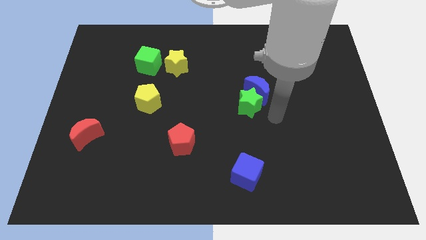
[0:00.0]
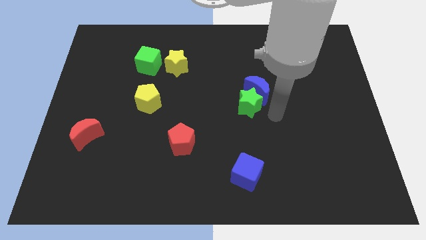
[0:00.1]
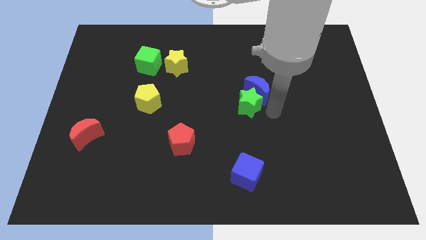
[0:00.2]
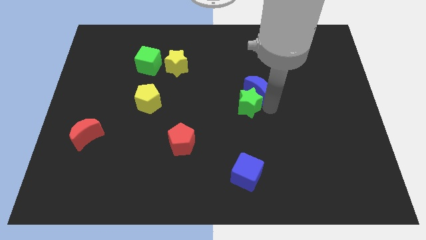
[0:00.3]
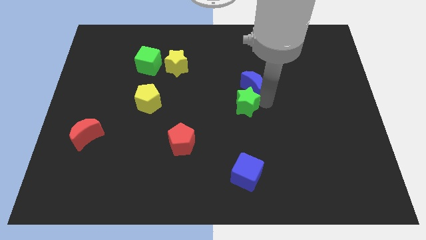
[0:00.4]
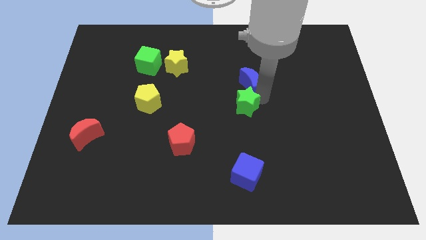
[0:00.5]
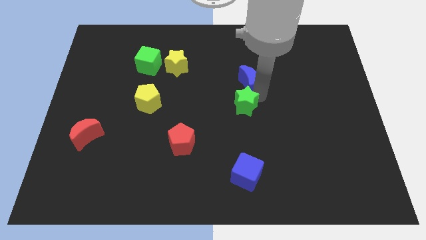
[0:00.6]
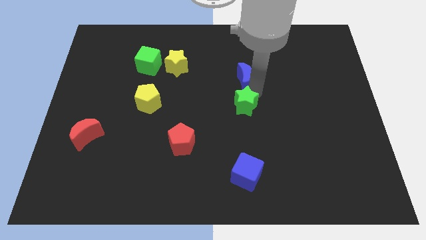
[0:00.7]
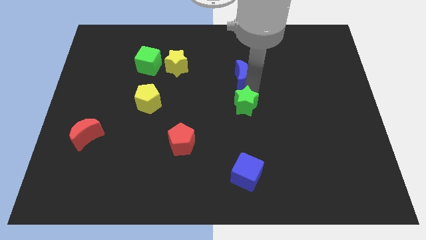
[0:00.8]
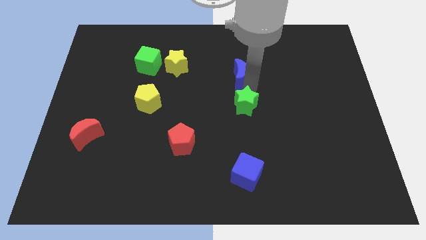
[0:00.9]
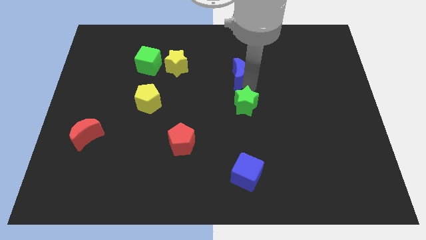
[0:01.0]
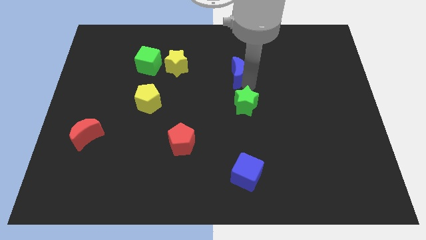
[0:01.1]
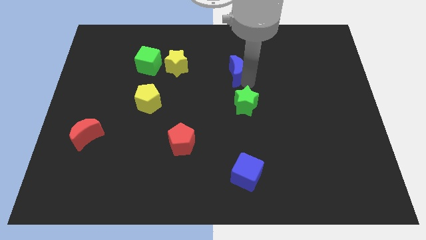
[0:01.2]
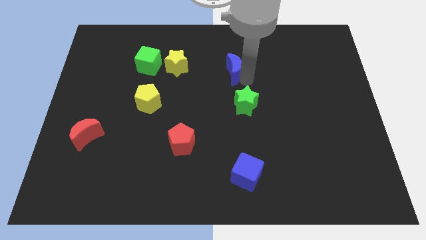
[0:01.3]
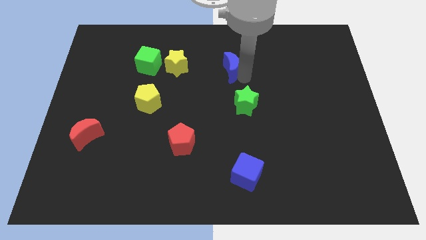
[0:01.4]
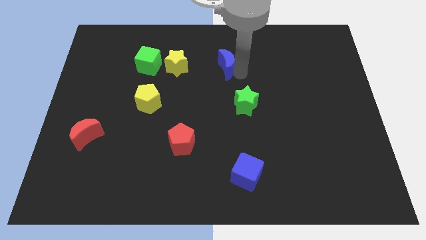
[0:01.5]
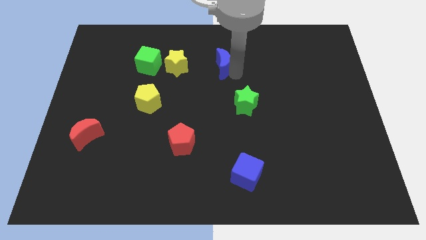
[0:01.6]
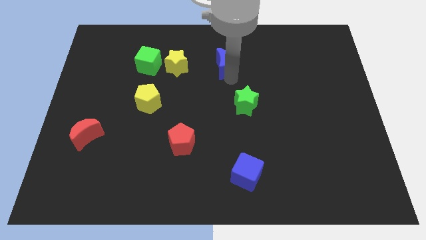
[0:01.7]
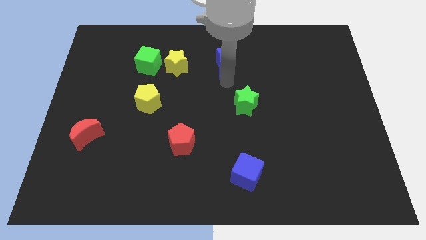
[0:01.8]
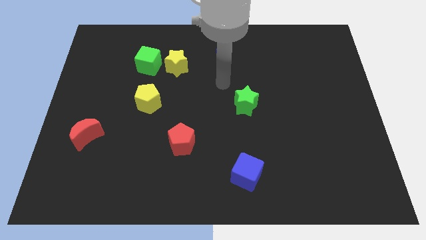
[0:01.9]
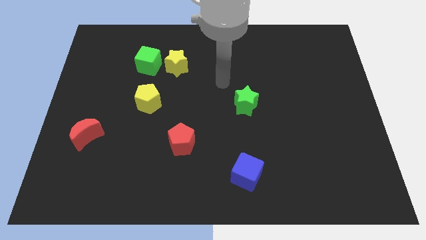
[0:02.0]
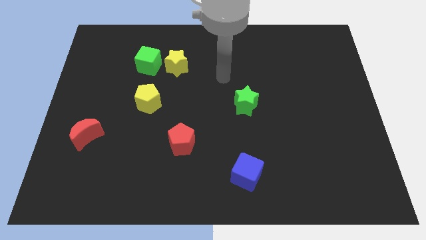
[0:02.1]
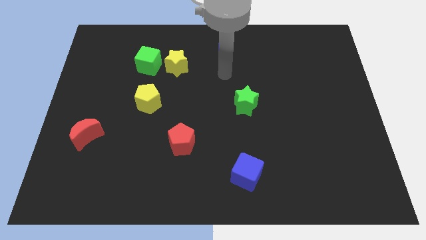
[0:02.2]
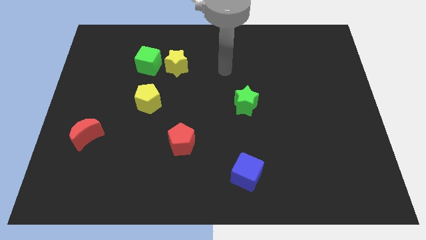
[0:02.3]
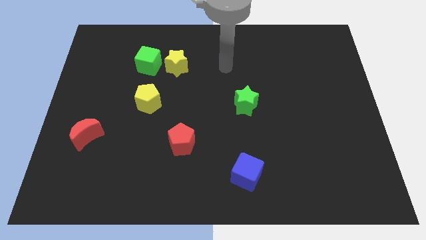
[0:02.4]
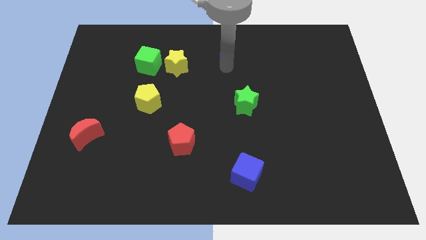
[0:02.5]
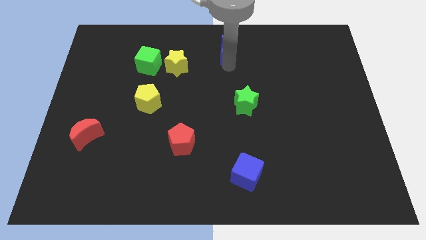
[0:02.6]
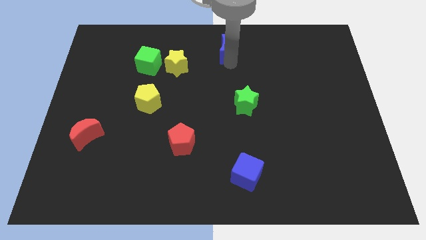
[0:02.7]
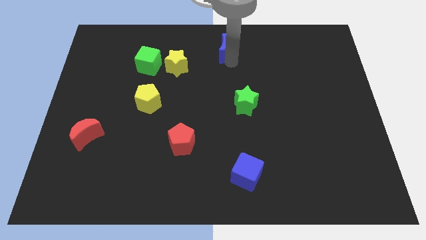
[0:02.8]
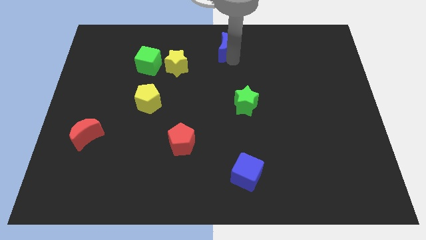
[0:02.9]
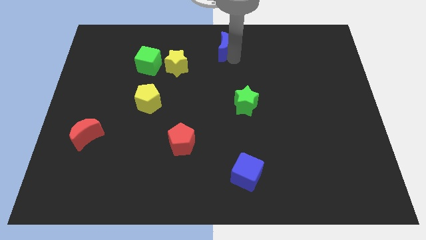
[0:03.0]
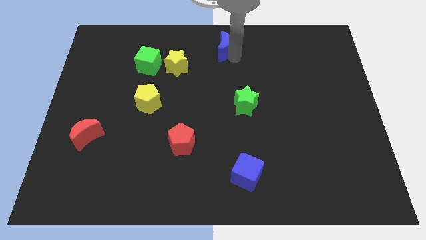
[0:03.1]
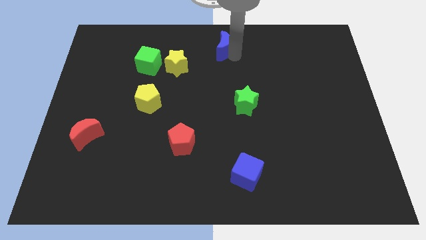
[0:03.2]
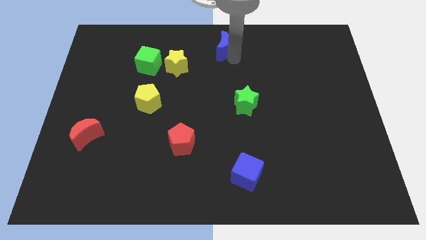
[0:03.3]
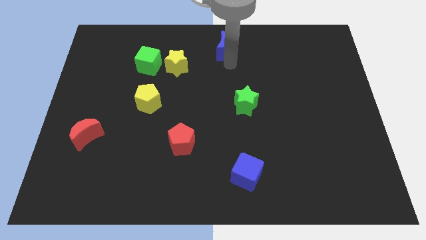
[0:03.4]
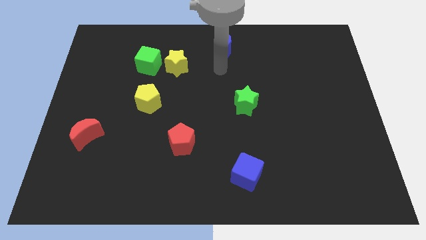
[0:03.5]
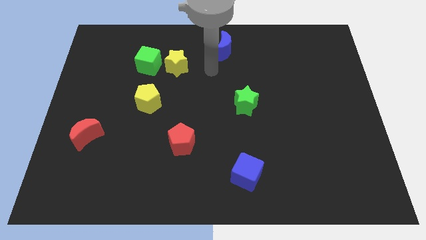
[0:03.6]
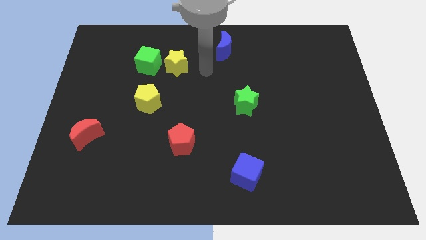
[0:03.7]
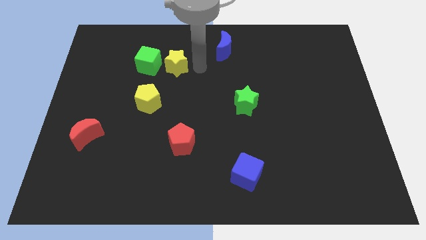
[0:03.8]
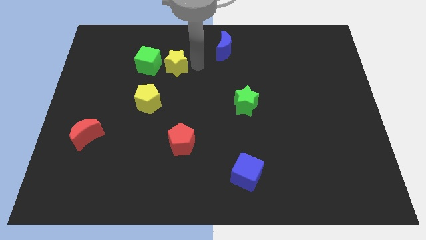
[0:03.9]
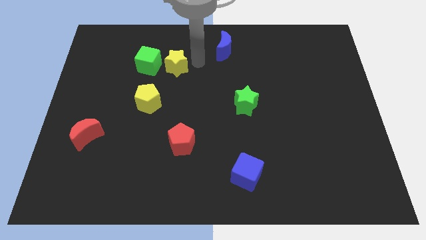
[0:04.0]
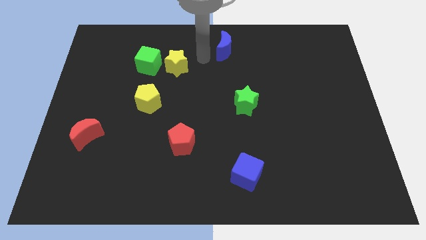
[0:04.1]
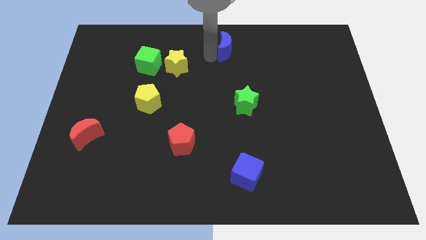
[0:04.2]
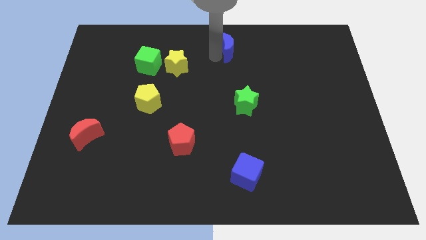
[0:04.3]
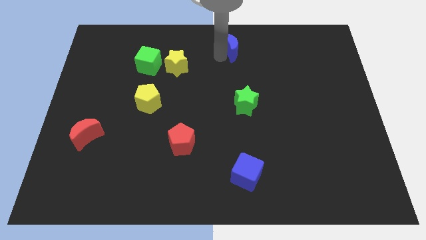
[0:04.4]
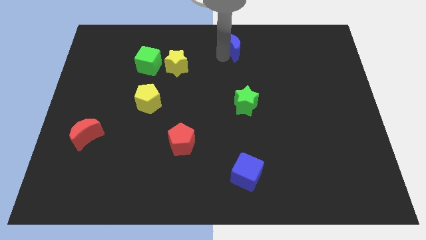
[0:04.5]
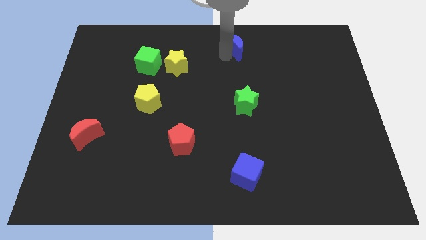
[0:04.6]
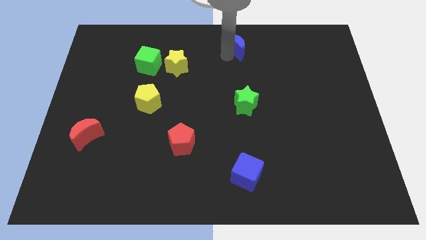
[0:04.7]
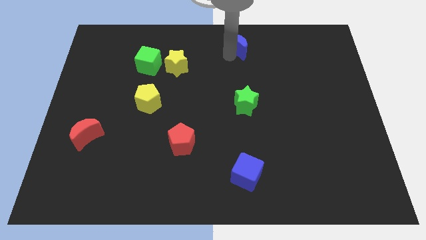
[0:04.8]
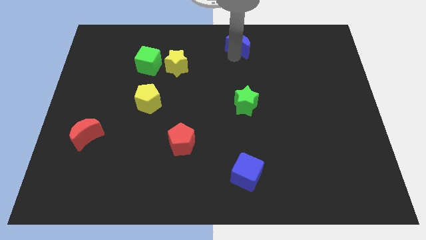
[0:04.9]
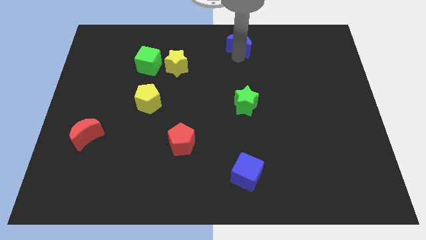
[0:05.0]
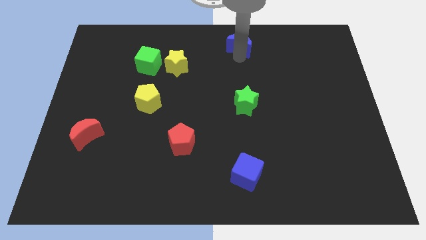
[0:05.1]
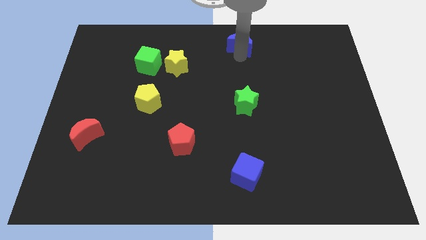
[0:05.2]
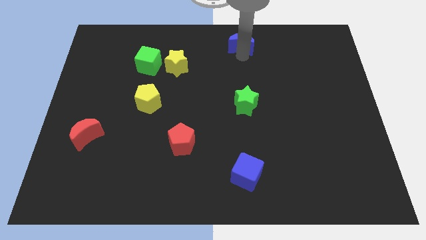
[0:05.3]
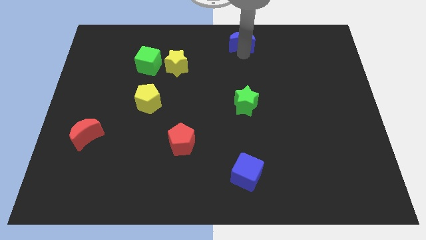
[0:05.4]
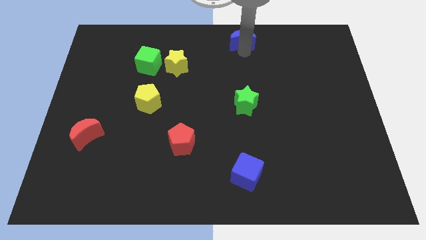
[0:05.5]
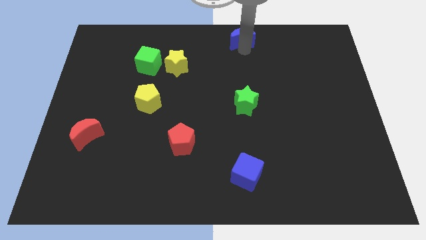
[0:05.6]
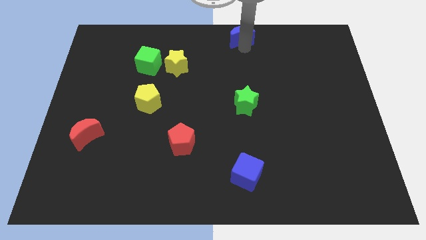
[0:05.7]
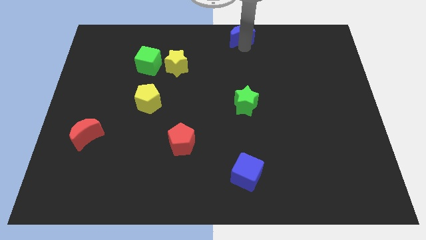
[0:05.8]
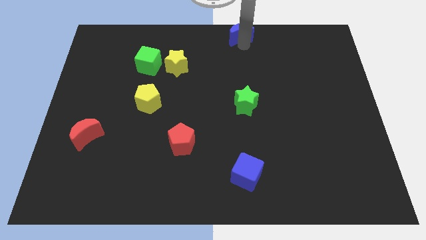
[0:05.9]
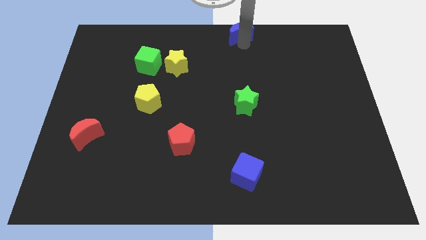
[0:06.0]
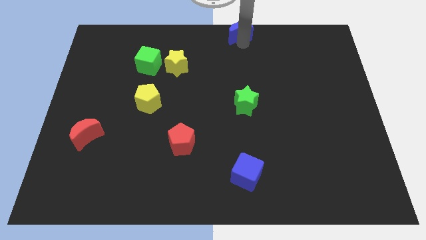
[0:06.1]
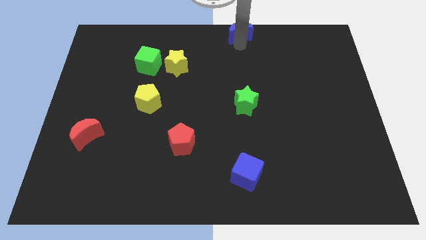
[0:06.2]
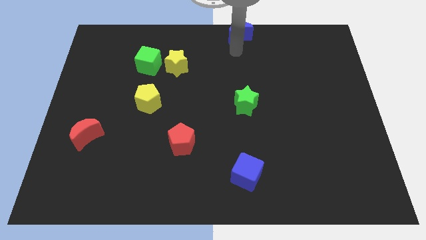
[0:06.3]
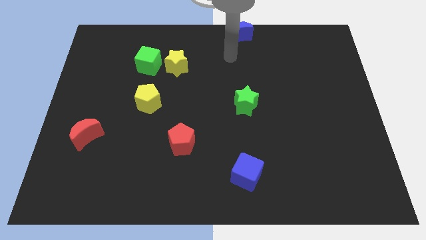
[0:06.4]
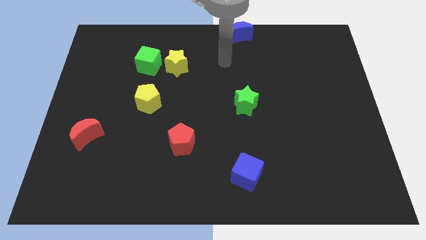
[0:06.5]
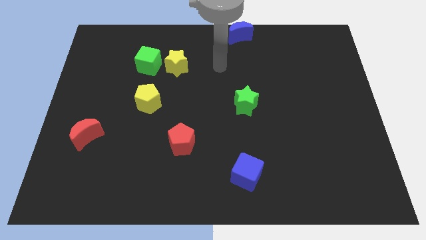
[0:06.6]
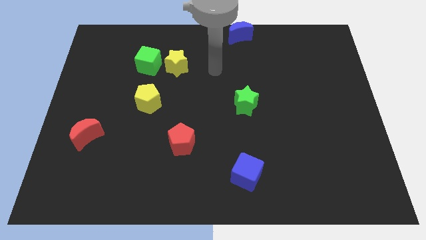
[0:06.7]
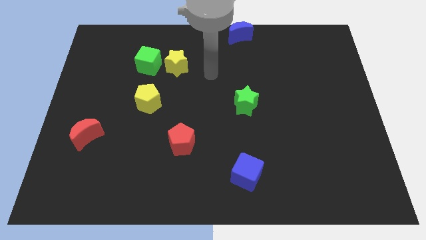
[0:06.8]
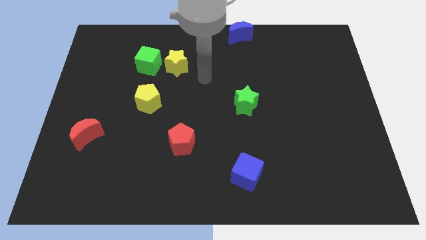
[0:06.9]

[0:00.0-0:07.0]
move the hand towards the bottom right side of the yellow star

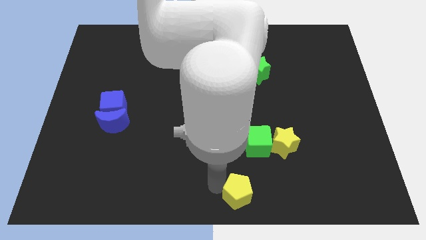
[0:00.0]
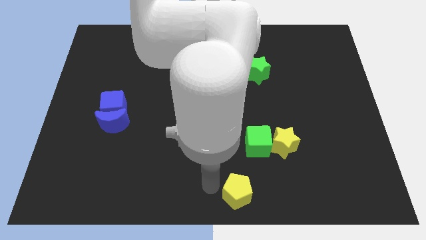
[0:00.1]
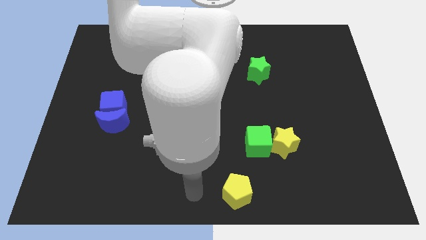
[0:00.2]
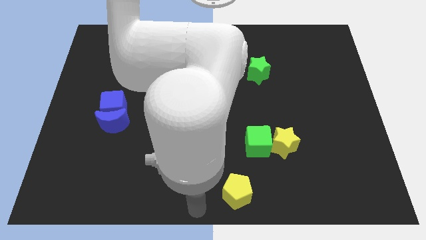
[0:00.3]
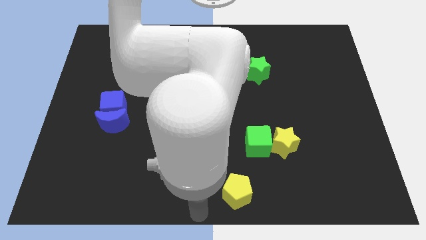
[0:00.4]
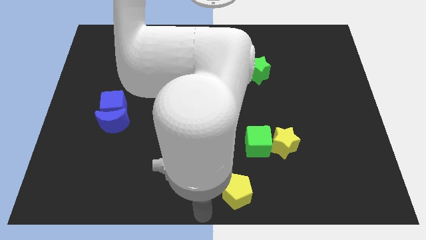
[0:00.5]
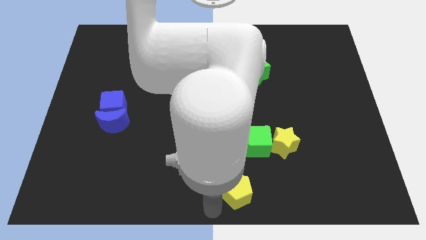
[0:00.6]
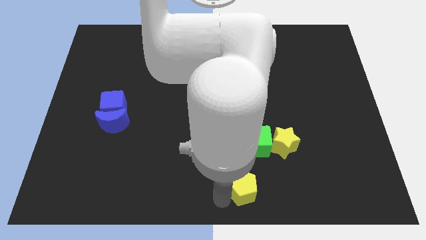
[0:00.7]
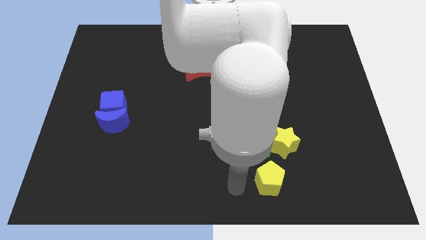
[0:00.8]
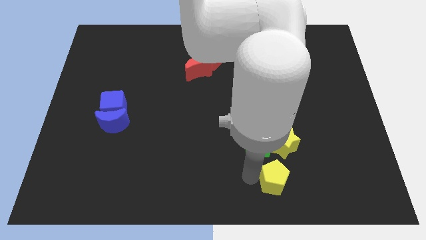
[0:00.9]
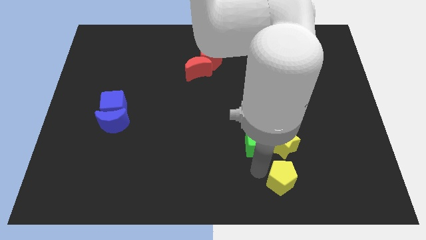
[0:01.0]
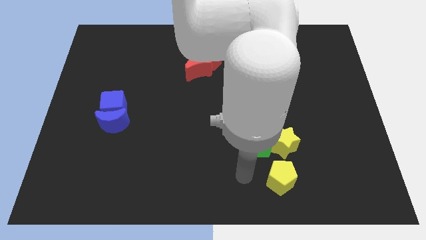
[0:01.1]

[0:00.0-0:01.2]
place the yellow pentagon vertically below the yellow star

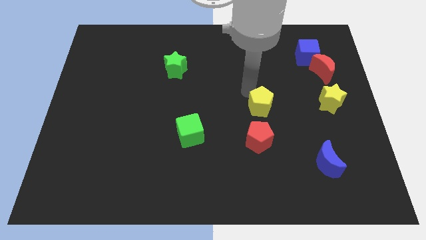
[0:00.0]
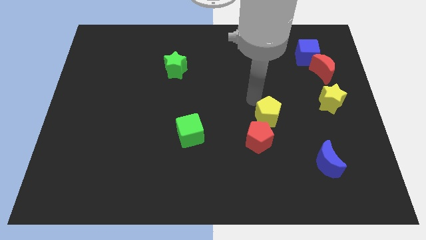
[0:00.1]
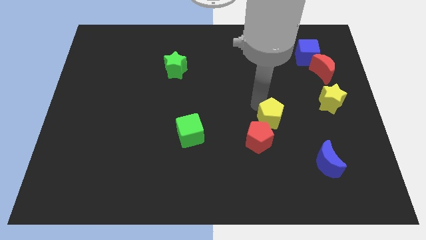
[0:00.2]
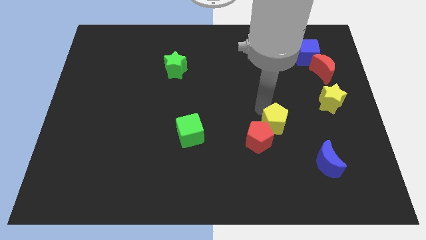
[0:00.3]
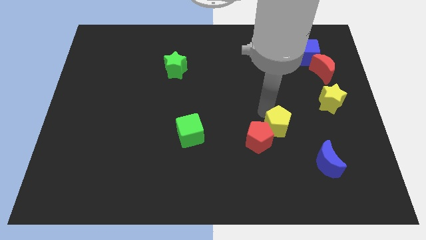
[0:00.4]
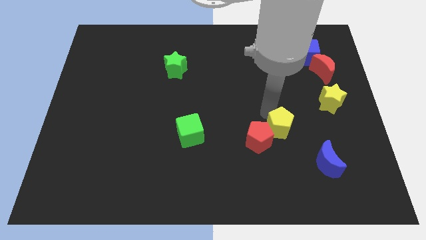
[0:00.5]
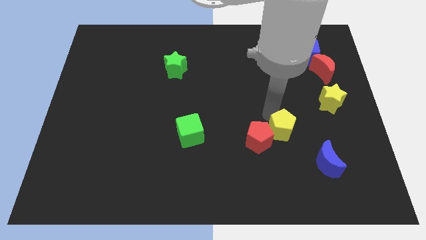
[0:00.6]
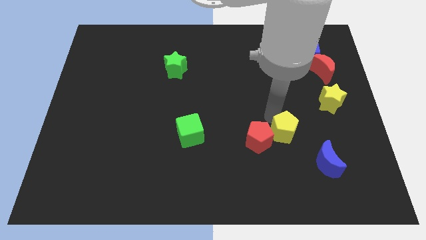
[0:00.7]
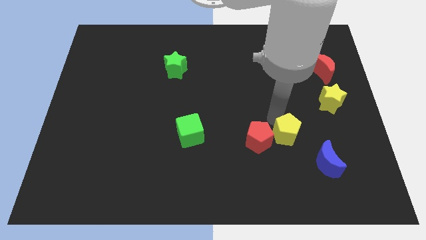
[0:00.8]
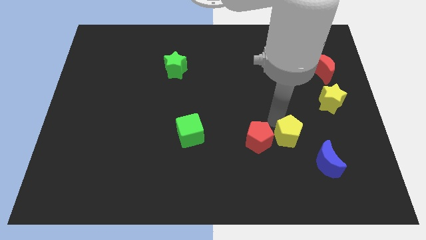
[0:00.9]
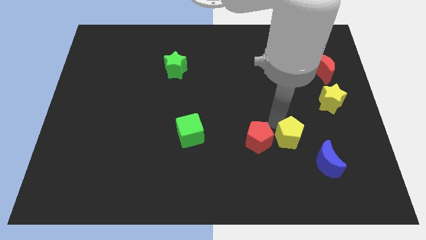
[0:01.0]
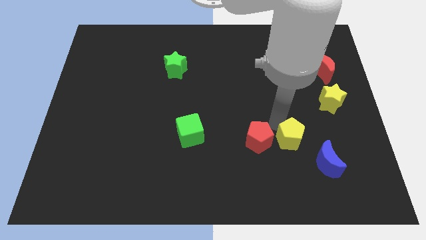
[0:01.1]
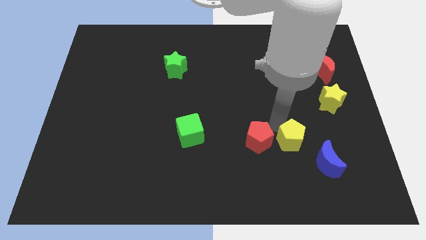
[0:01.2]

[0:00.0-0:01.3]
push the yellow pentagon to the right of the red pentagon
